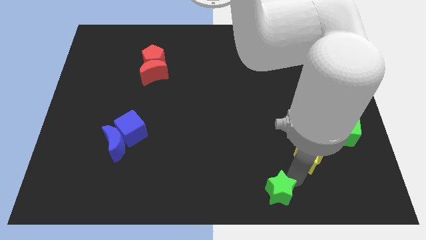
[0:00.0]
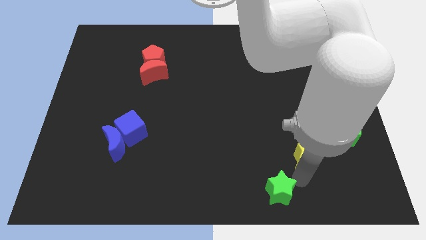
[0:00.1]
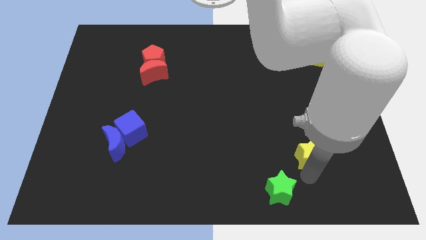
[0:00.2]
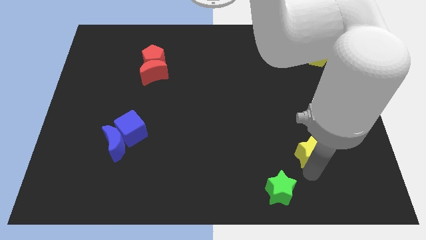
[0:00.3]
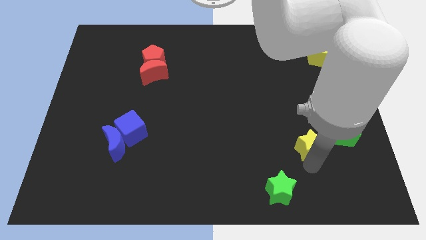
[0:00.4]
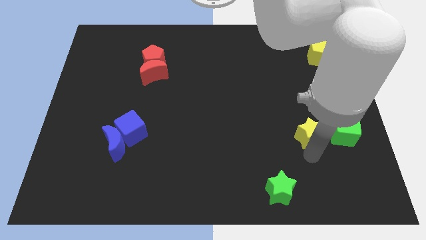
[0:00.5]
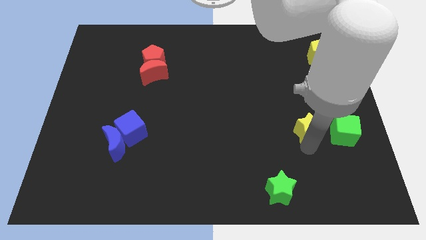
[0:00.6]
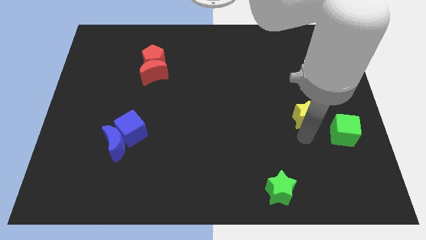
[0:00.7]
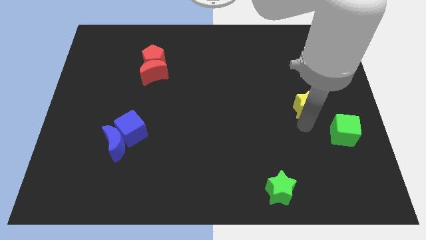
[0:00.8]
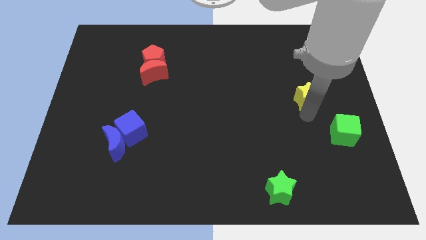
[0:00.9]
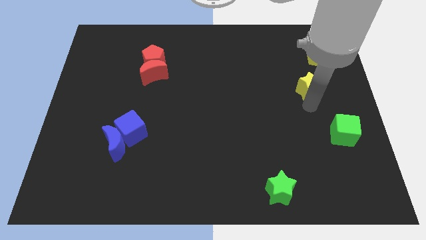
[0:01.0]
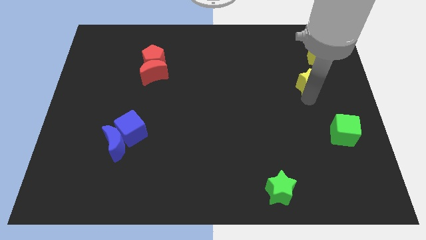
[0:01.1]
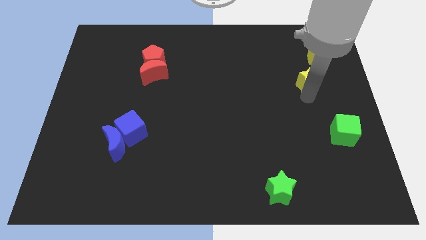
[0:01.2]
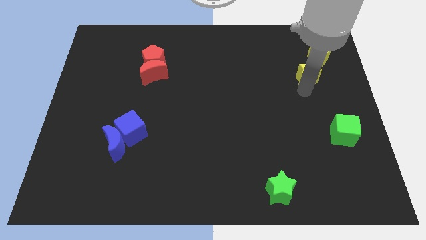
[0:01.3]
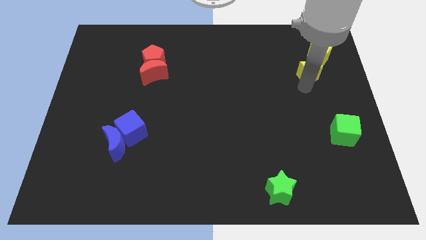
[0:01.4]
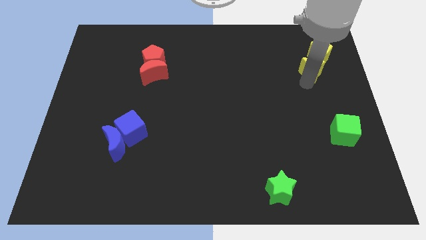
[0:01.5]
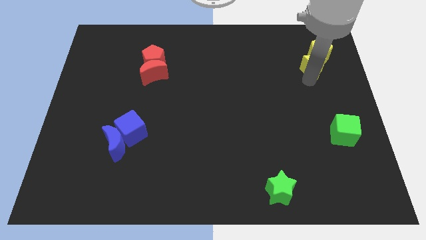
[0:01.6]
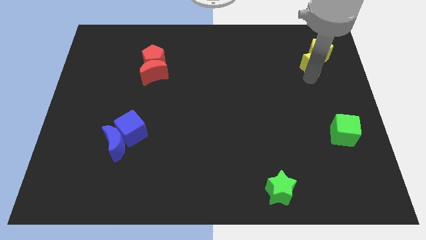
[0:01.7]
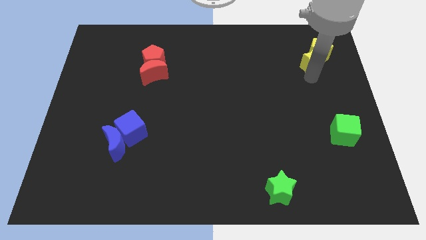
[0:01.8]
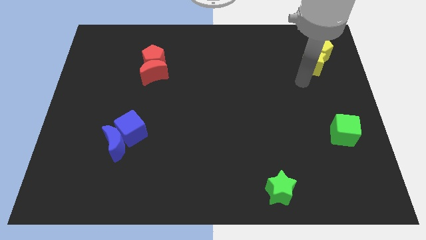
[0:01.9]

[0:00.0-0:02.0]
attach the yellow star with the yellow pentagon

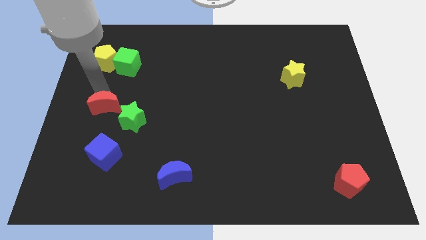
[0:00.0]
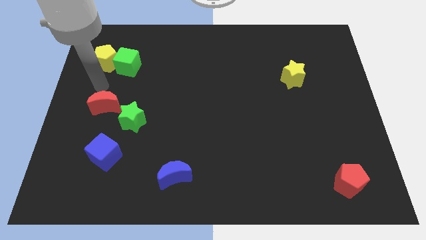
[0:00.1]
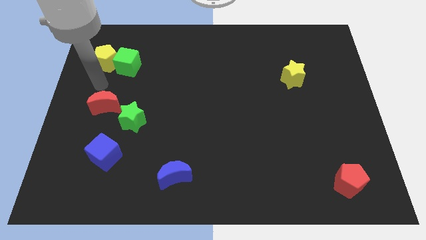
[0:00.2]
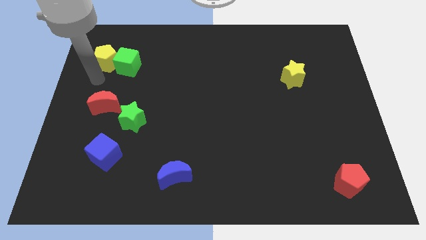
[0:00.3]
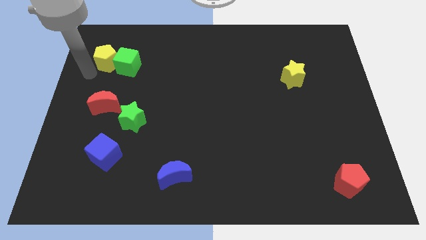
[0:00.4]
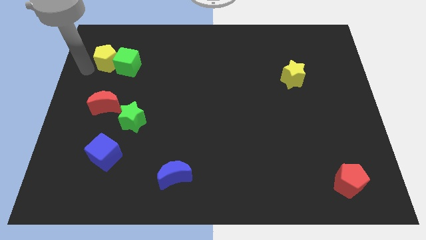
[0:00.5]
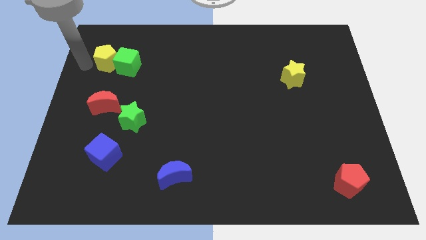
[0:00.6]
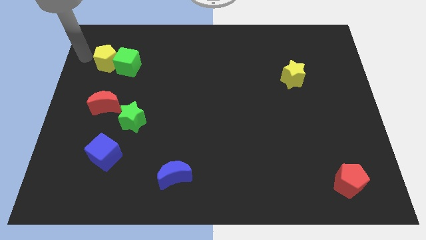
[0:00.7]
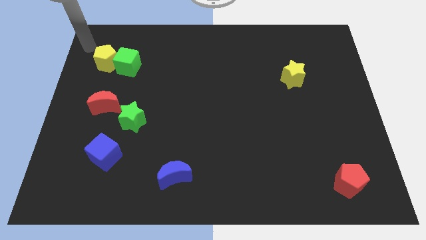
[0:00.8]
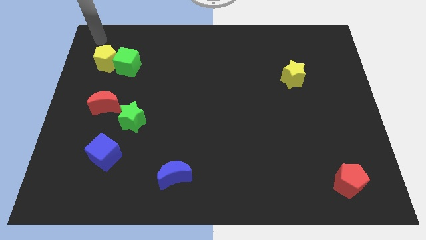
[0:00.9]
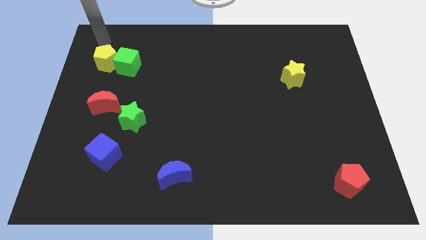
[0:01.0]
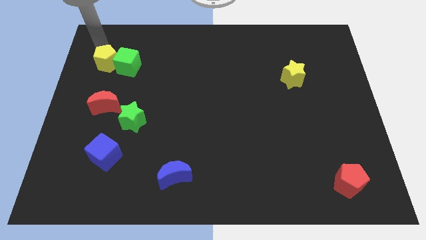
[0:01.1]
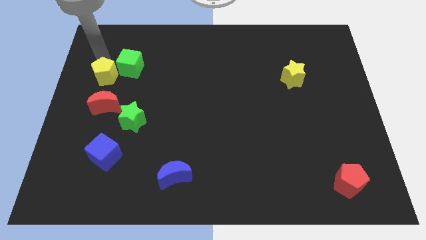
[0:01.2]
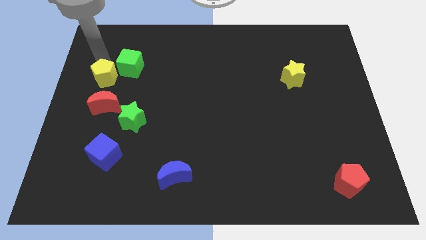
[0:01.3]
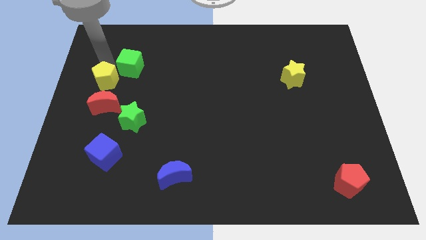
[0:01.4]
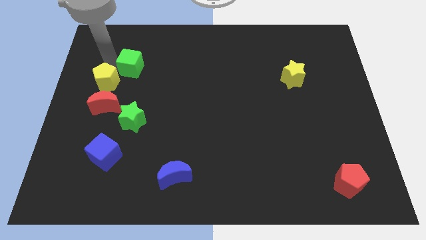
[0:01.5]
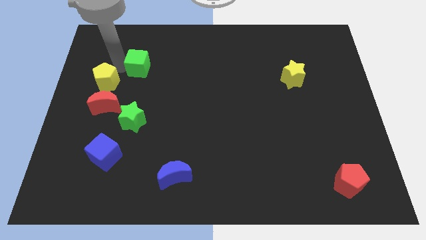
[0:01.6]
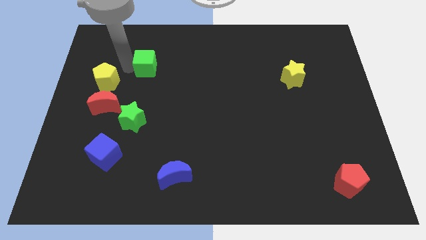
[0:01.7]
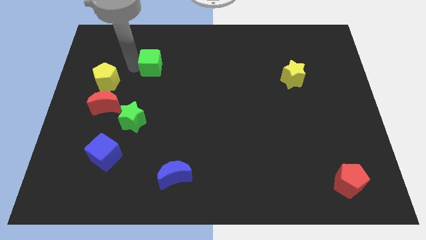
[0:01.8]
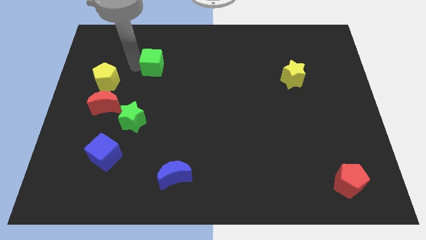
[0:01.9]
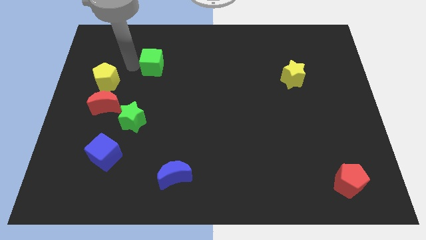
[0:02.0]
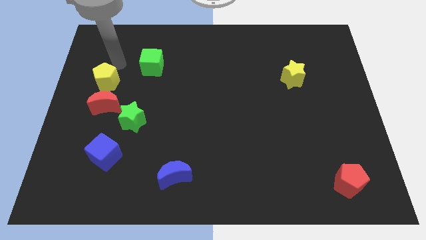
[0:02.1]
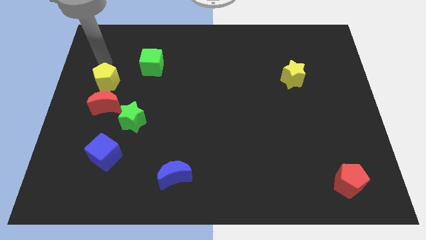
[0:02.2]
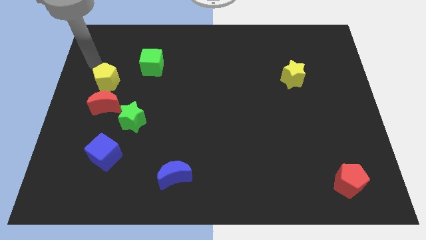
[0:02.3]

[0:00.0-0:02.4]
place the green cube diagonally top right to the yellow pentagon

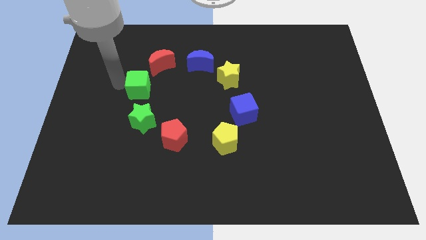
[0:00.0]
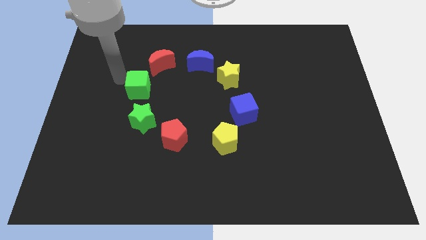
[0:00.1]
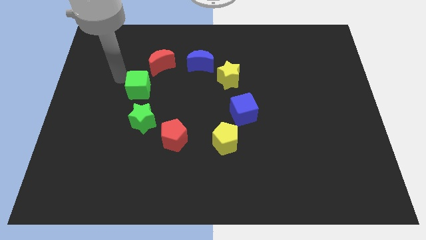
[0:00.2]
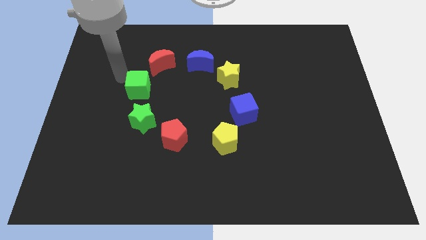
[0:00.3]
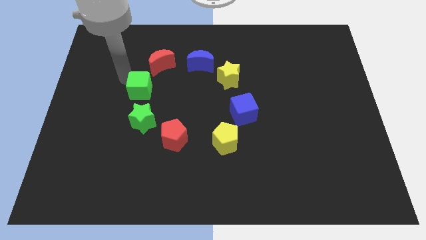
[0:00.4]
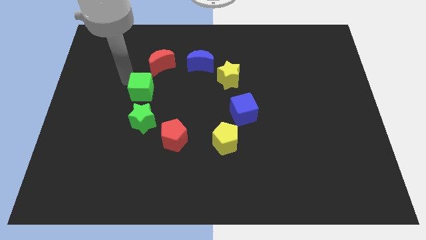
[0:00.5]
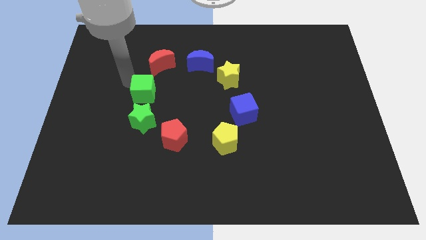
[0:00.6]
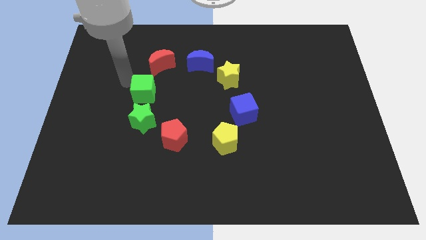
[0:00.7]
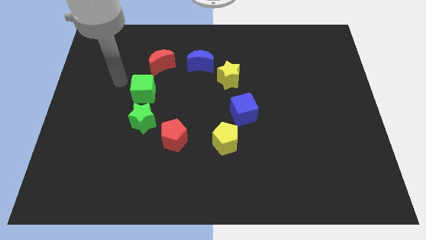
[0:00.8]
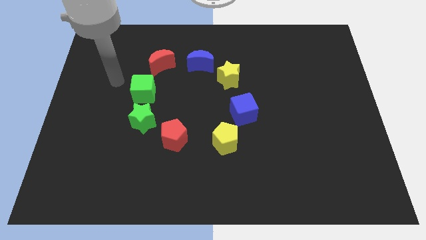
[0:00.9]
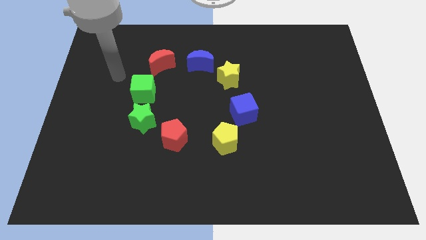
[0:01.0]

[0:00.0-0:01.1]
slightly move the green cube towards the right

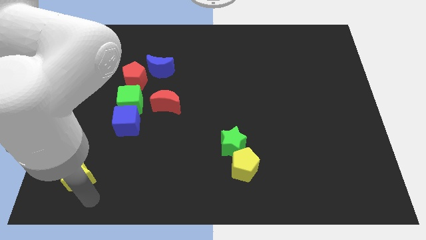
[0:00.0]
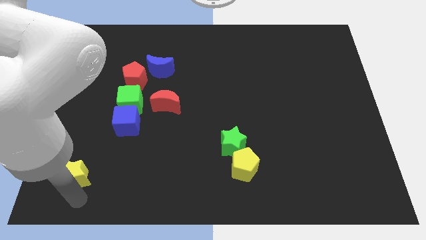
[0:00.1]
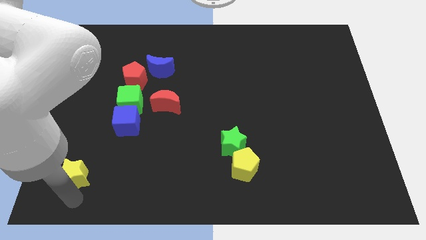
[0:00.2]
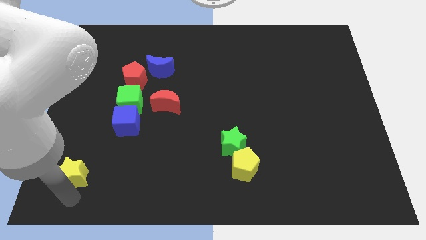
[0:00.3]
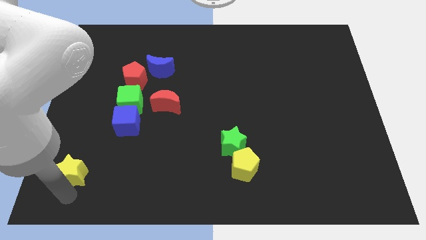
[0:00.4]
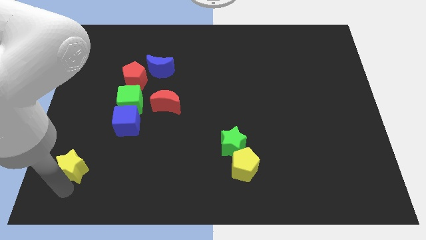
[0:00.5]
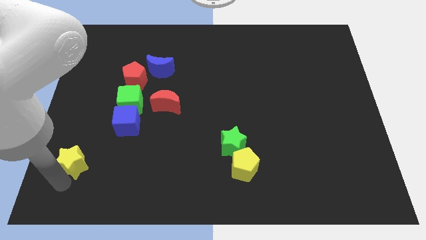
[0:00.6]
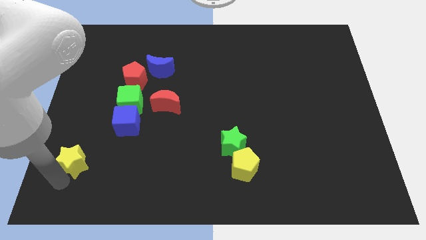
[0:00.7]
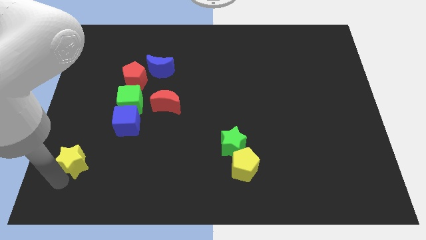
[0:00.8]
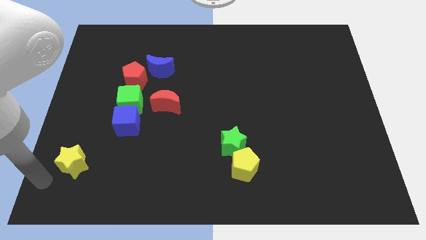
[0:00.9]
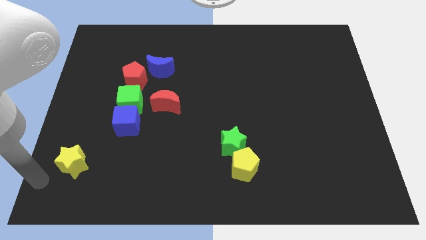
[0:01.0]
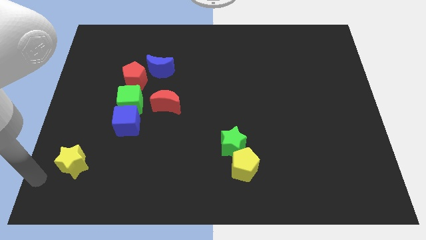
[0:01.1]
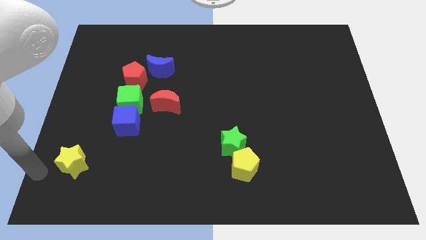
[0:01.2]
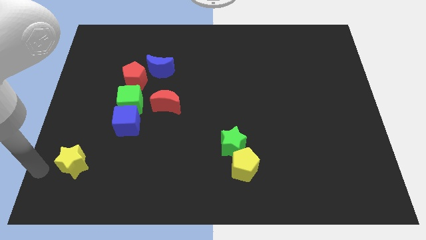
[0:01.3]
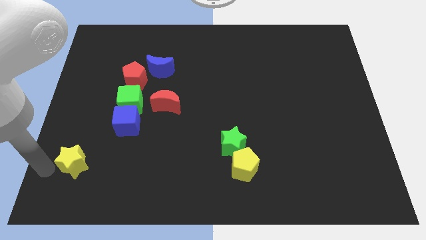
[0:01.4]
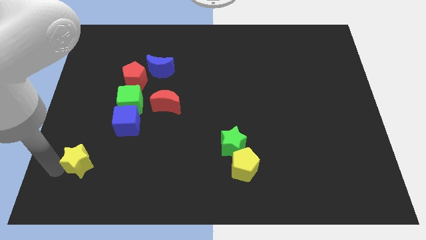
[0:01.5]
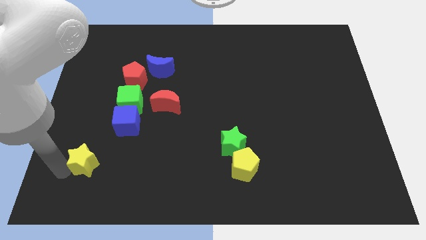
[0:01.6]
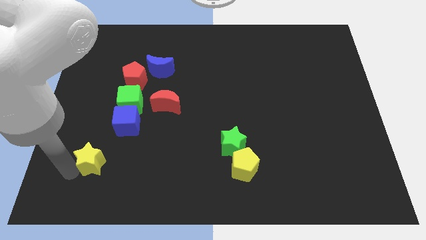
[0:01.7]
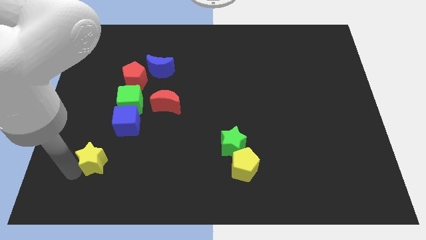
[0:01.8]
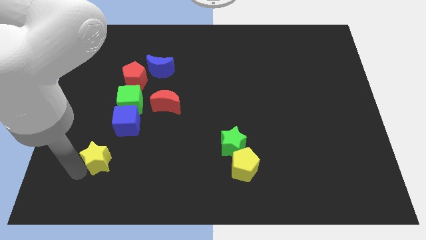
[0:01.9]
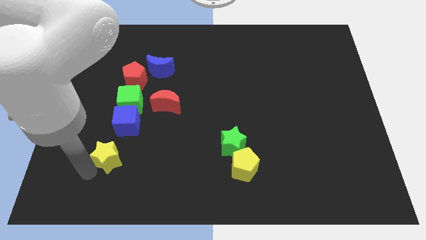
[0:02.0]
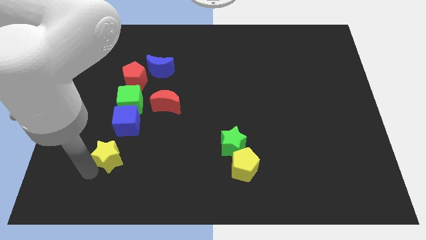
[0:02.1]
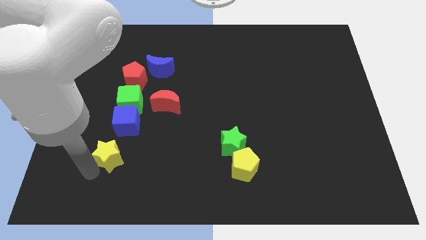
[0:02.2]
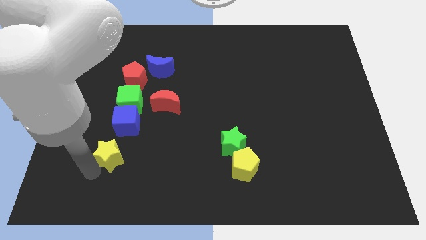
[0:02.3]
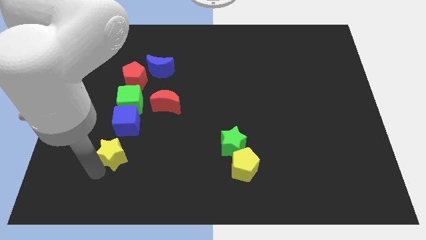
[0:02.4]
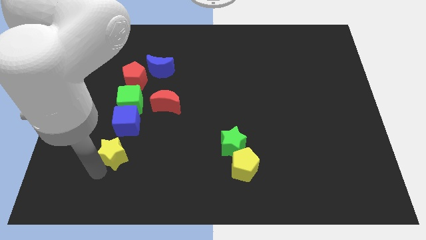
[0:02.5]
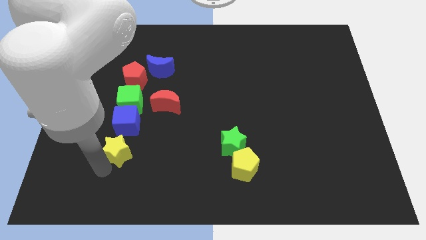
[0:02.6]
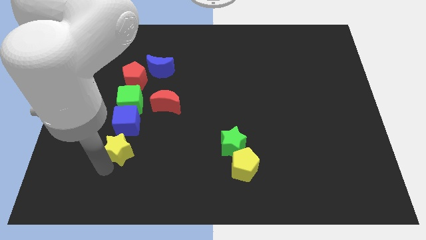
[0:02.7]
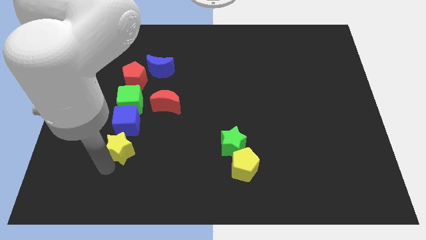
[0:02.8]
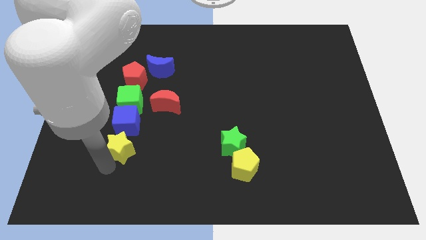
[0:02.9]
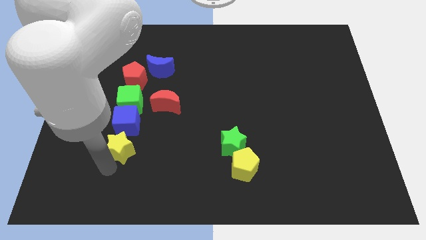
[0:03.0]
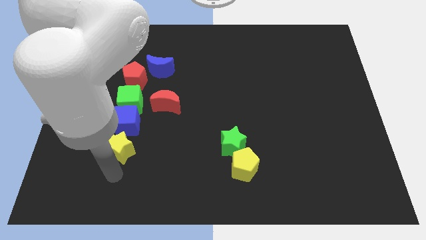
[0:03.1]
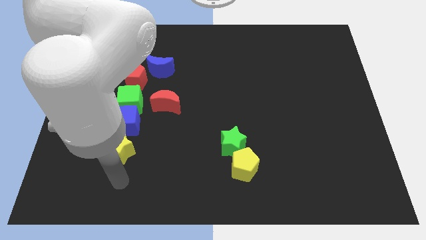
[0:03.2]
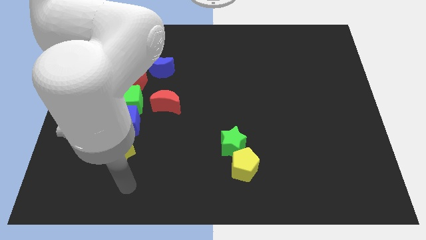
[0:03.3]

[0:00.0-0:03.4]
move the yellow star below the blue cube
